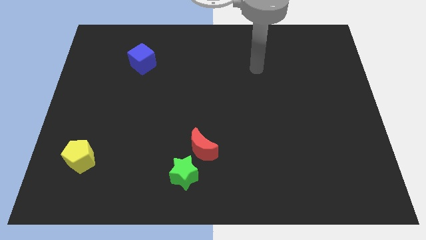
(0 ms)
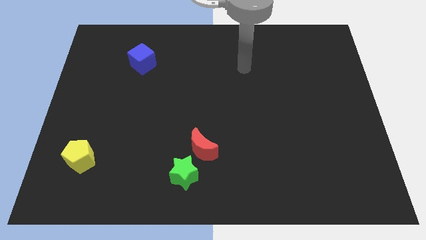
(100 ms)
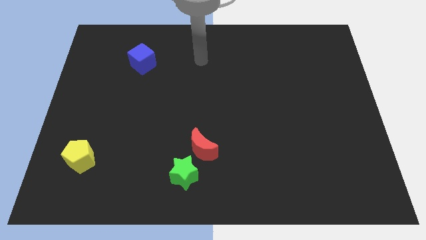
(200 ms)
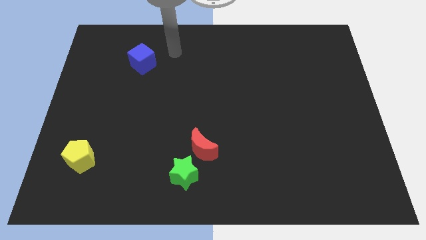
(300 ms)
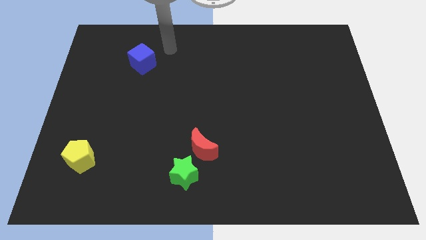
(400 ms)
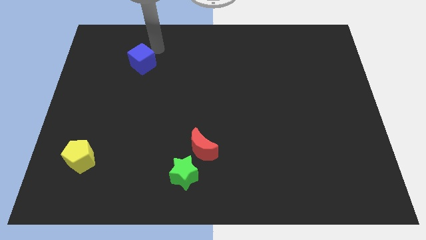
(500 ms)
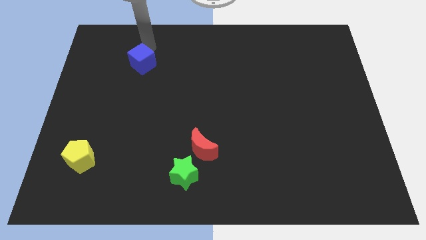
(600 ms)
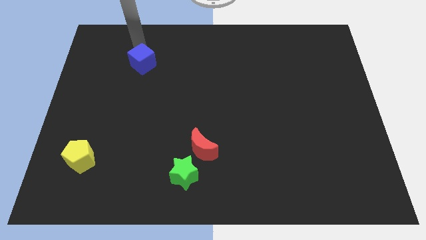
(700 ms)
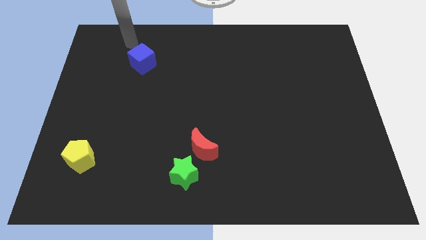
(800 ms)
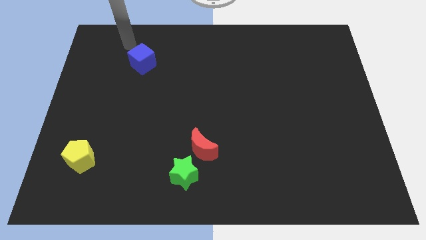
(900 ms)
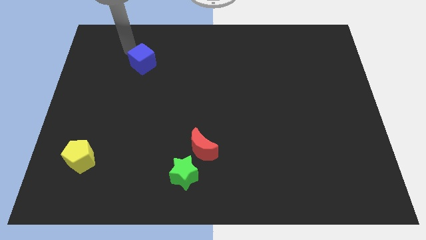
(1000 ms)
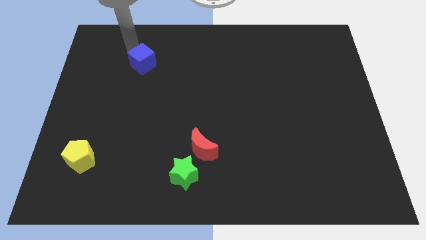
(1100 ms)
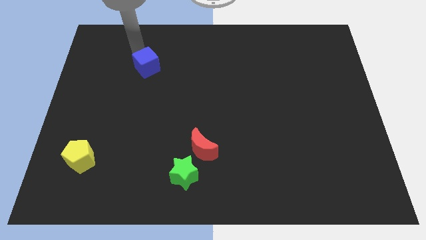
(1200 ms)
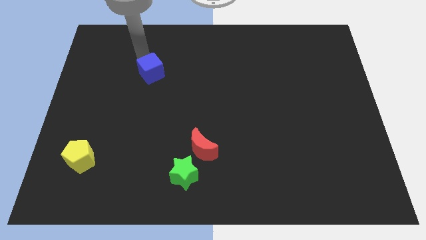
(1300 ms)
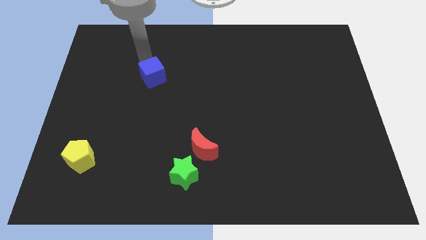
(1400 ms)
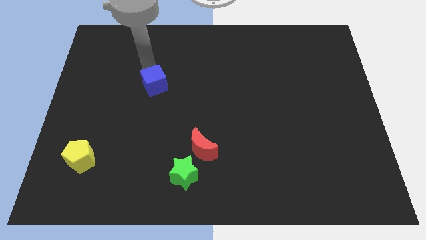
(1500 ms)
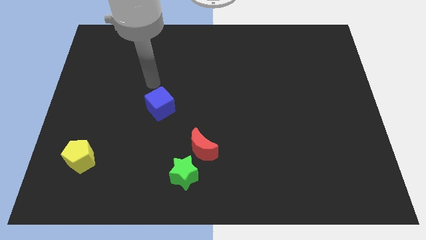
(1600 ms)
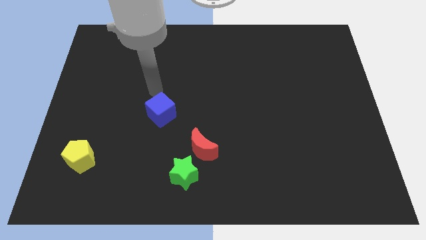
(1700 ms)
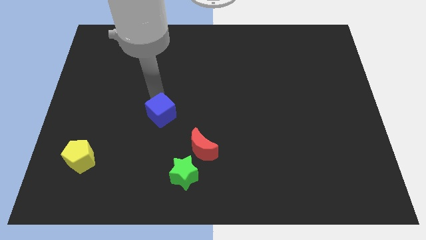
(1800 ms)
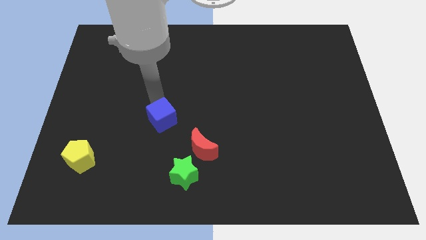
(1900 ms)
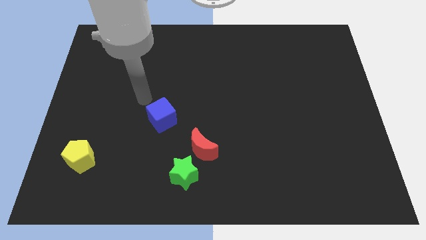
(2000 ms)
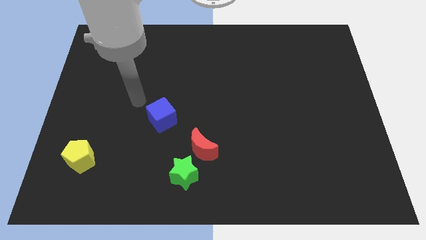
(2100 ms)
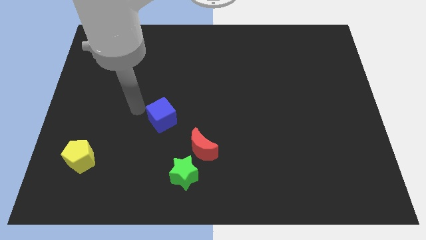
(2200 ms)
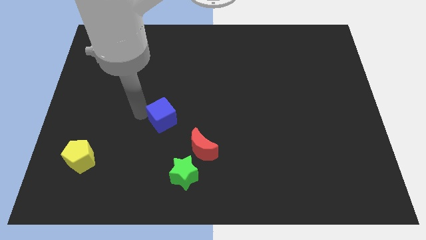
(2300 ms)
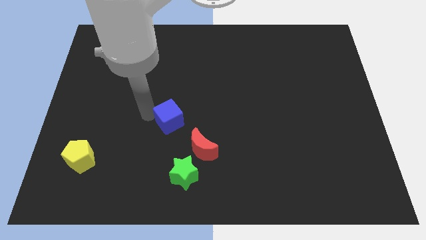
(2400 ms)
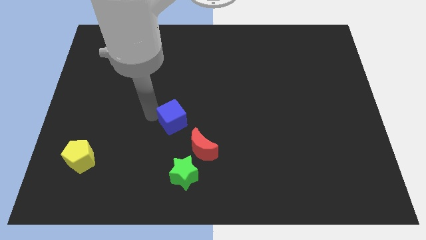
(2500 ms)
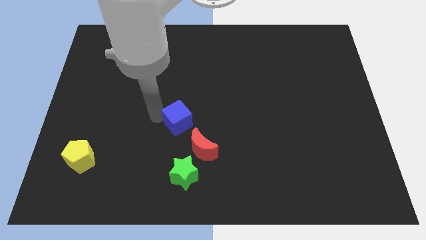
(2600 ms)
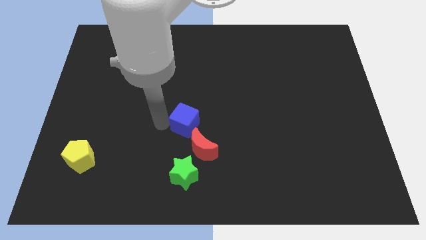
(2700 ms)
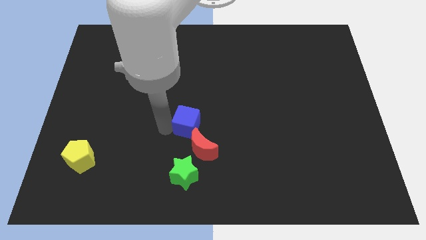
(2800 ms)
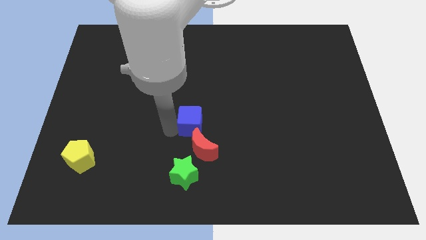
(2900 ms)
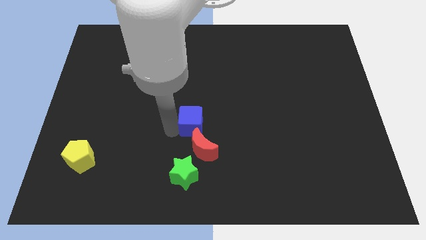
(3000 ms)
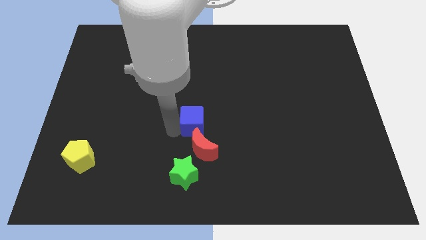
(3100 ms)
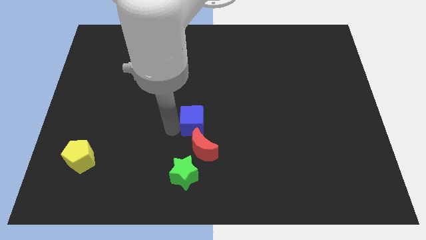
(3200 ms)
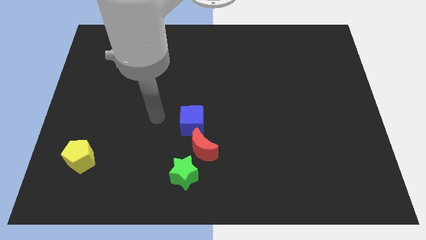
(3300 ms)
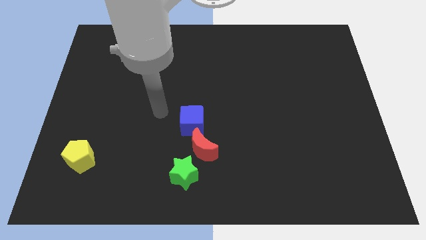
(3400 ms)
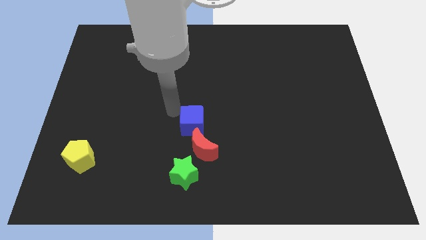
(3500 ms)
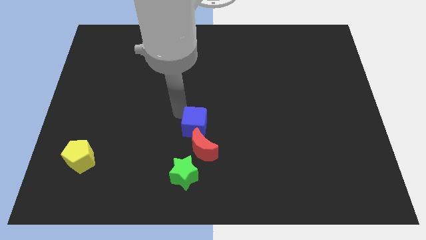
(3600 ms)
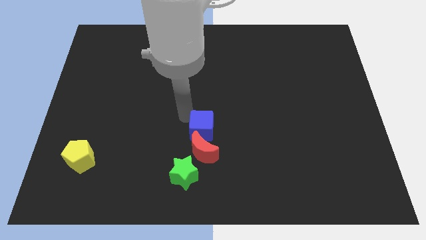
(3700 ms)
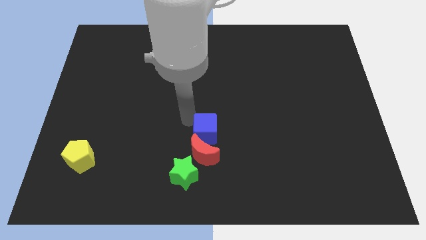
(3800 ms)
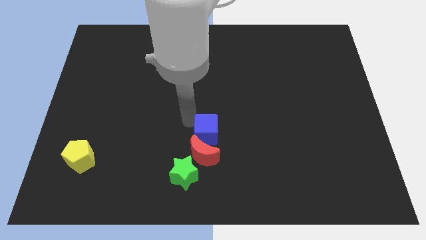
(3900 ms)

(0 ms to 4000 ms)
slide the cube towards the moon

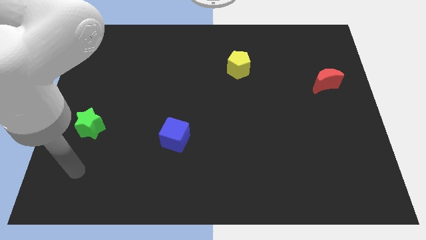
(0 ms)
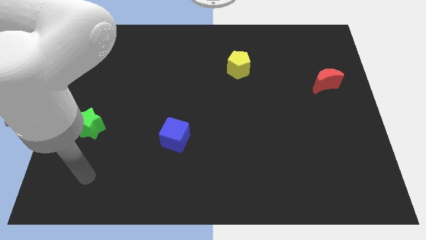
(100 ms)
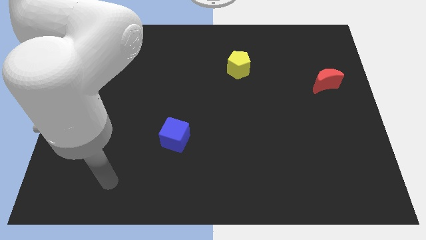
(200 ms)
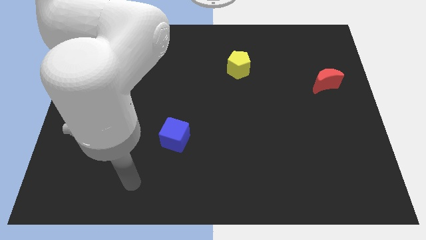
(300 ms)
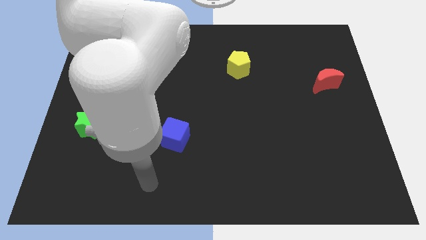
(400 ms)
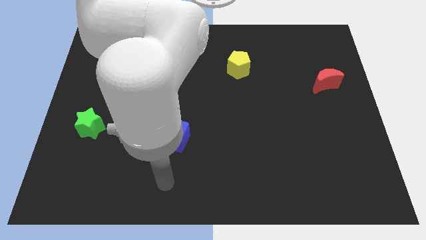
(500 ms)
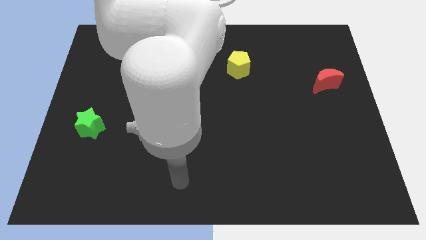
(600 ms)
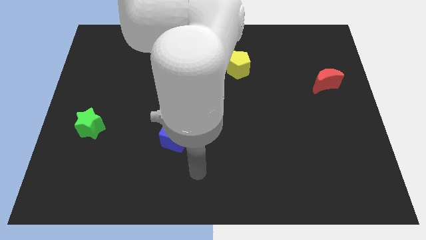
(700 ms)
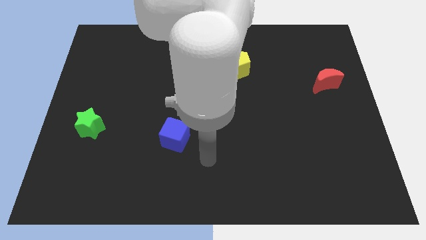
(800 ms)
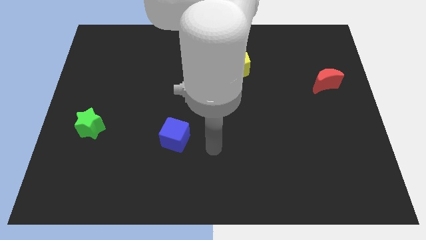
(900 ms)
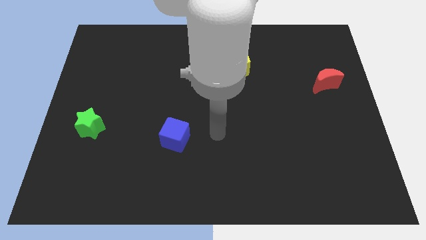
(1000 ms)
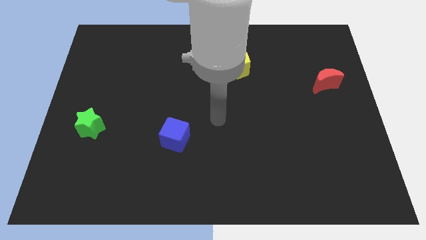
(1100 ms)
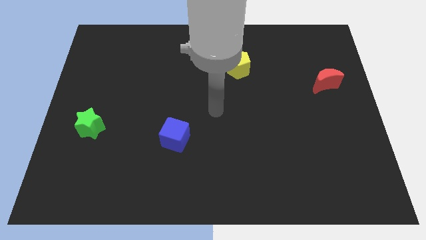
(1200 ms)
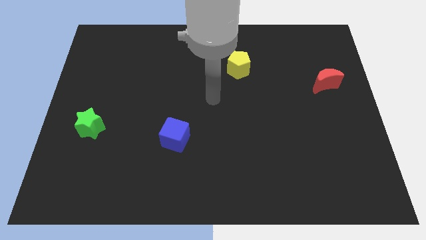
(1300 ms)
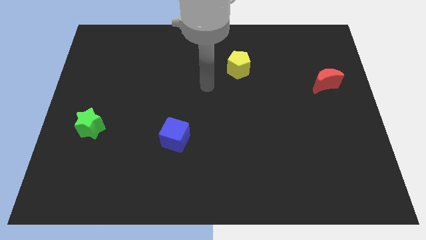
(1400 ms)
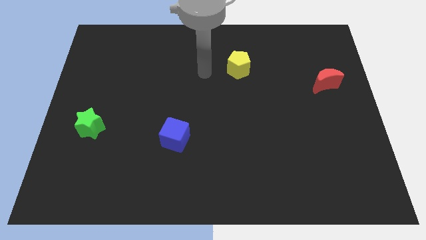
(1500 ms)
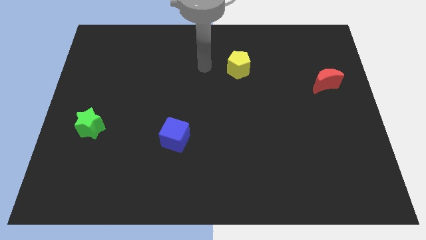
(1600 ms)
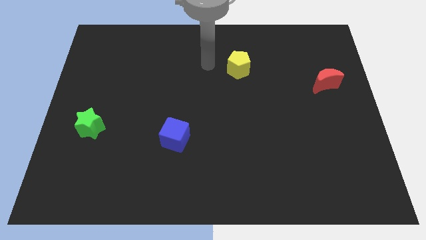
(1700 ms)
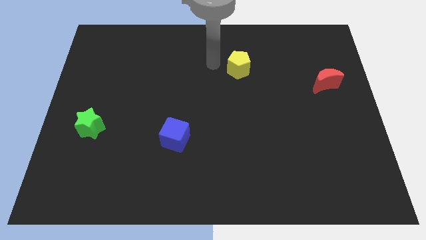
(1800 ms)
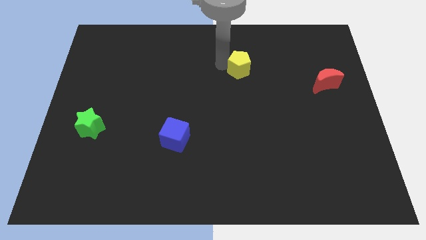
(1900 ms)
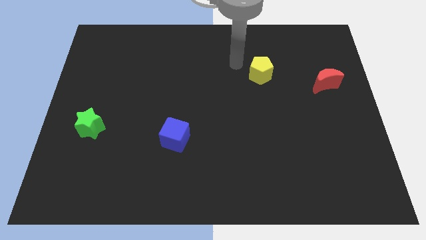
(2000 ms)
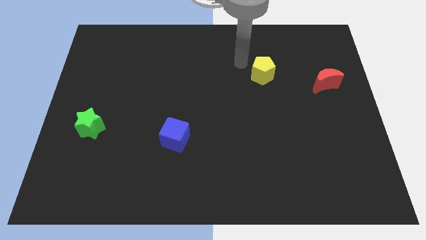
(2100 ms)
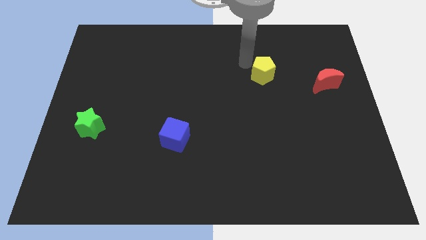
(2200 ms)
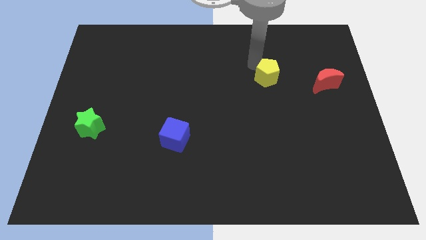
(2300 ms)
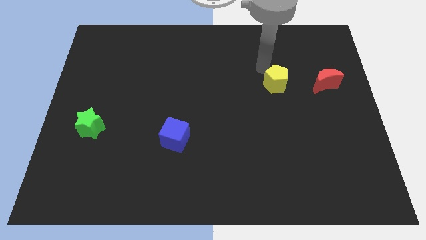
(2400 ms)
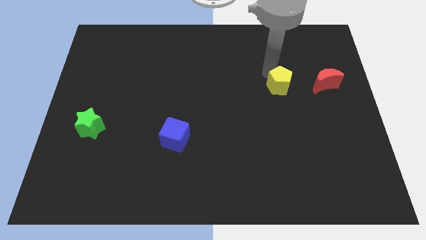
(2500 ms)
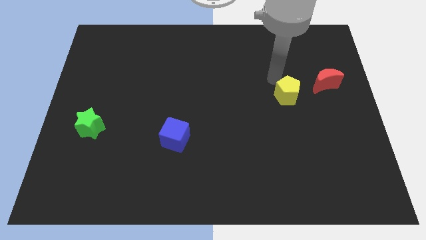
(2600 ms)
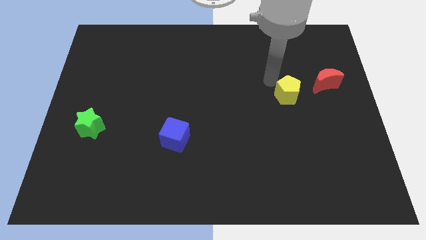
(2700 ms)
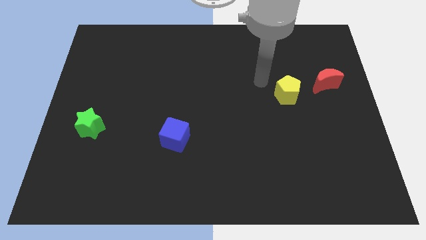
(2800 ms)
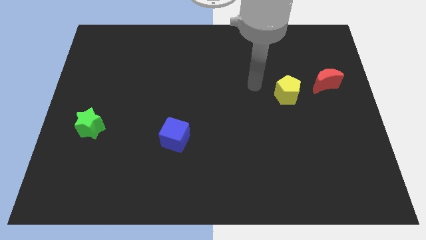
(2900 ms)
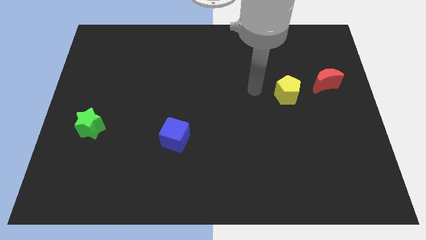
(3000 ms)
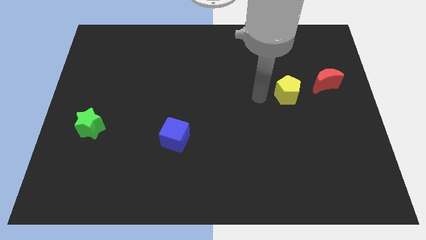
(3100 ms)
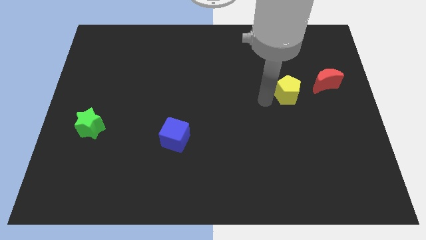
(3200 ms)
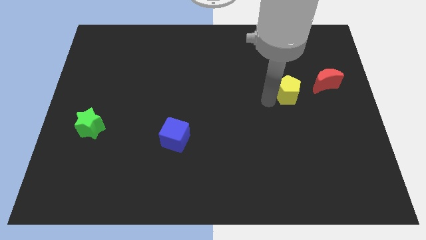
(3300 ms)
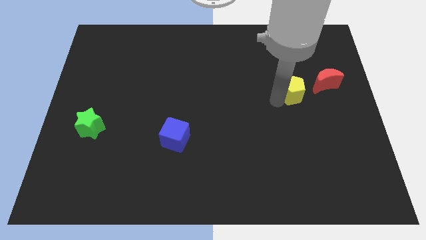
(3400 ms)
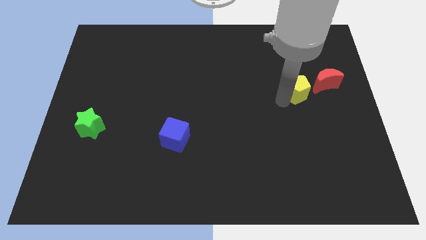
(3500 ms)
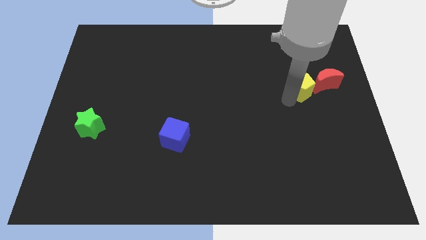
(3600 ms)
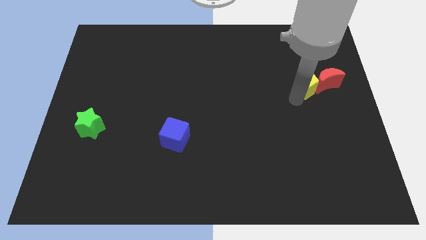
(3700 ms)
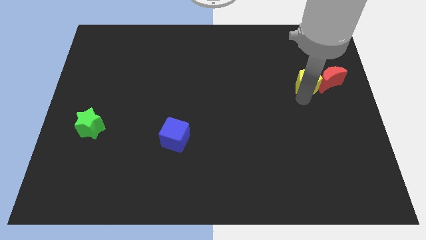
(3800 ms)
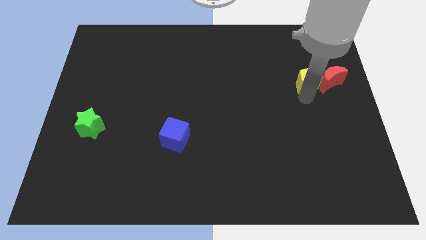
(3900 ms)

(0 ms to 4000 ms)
push the pentagon close to the moon

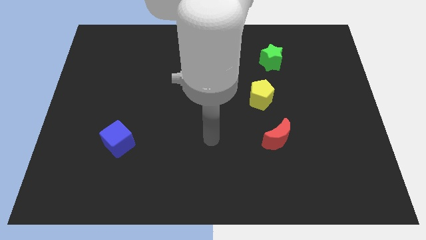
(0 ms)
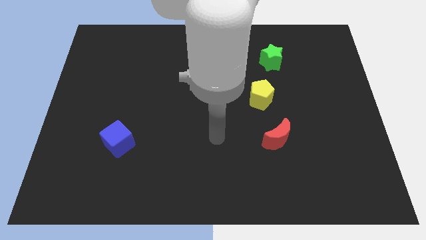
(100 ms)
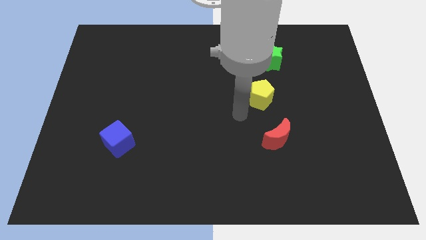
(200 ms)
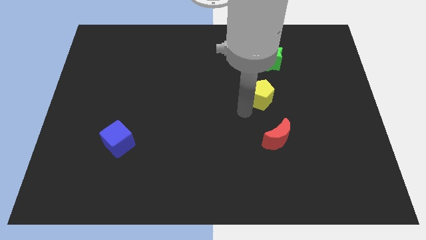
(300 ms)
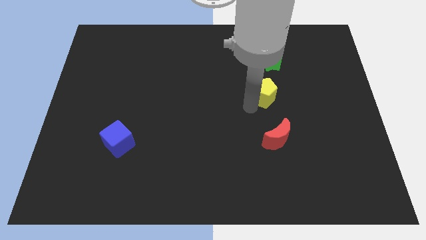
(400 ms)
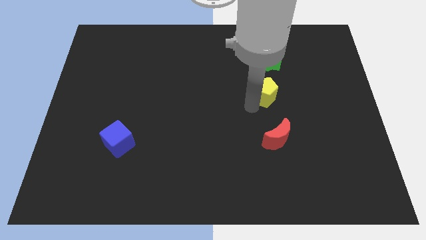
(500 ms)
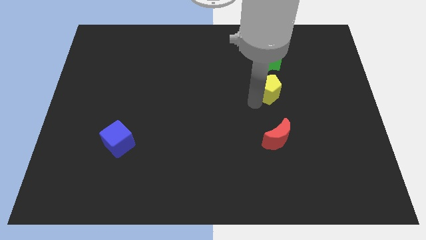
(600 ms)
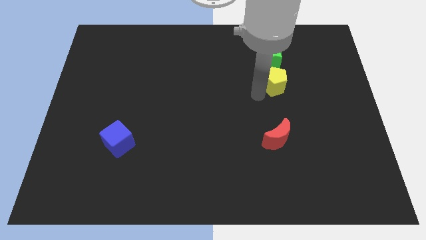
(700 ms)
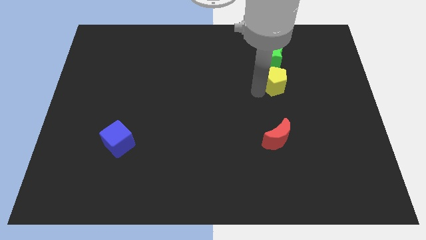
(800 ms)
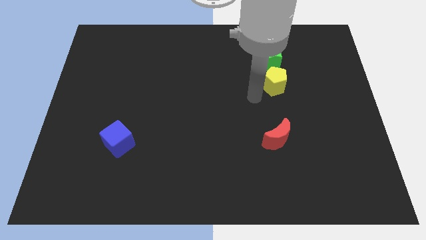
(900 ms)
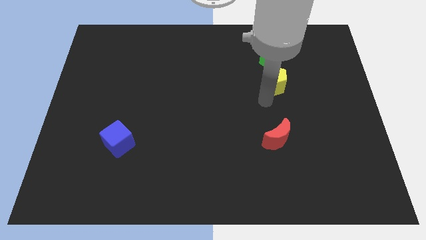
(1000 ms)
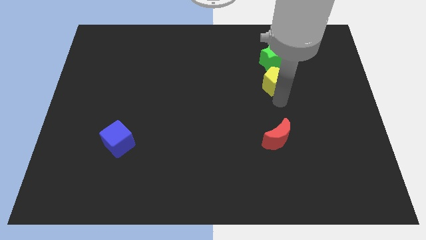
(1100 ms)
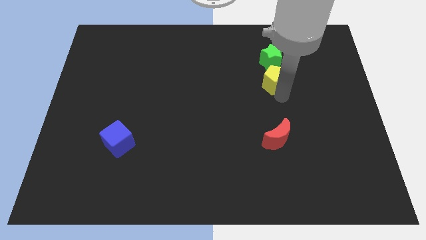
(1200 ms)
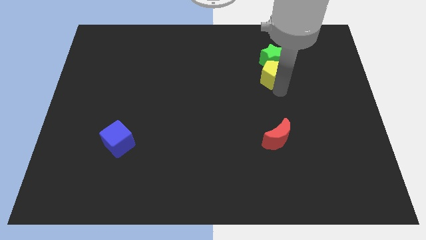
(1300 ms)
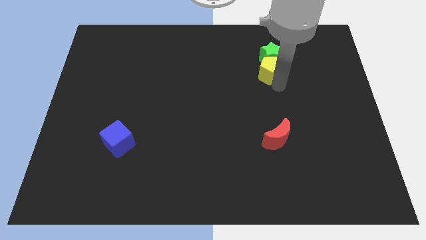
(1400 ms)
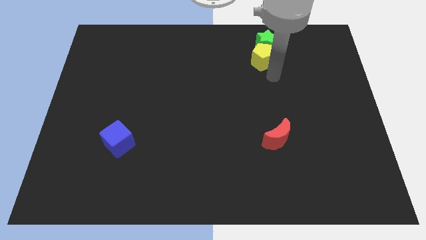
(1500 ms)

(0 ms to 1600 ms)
push the yellow block to the green block
